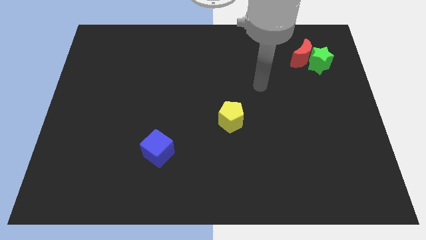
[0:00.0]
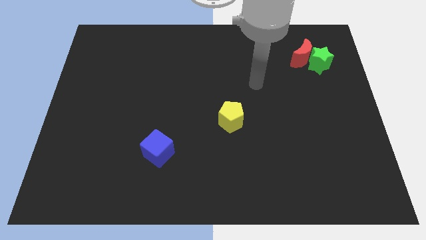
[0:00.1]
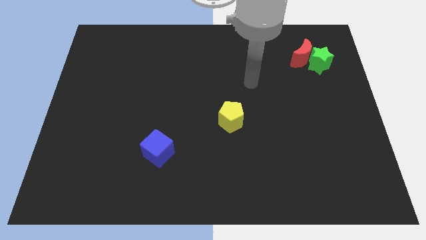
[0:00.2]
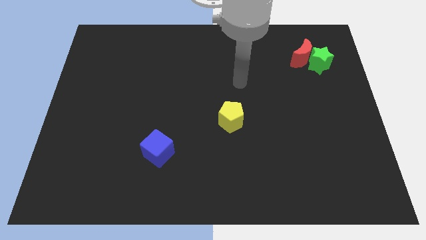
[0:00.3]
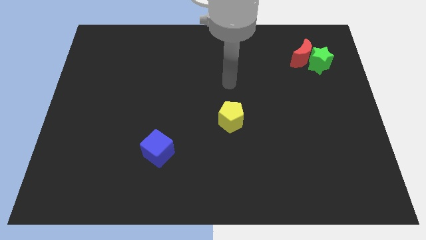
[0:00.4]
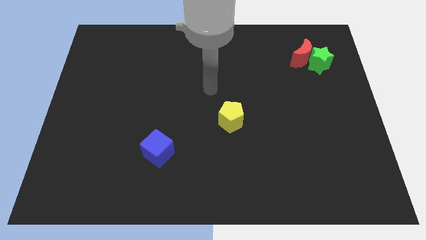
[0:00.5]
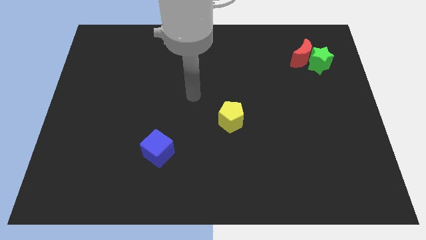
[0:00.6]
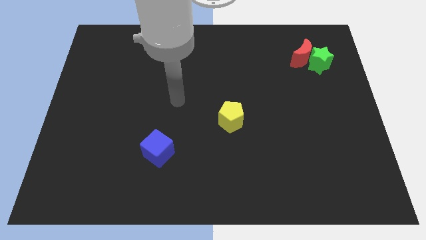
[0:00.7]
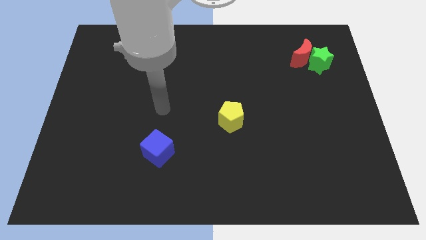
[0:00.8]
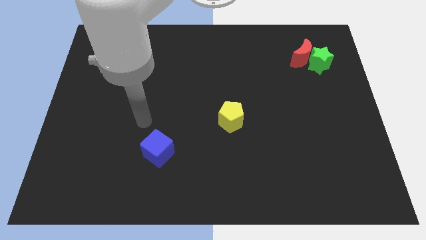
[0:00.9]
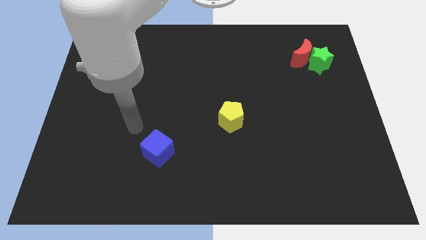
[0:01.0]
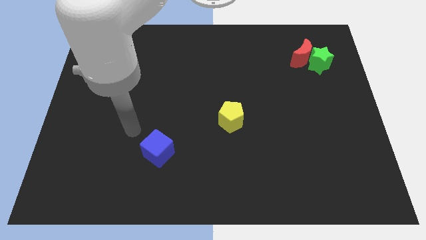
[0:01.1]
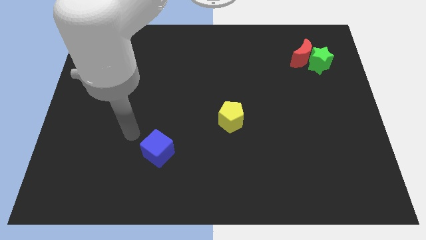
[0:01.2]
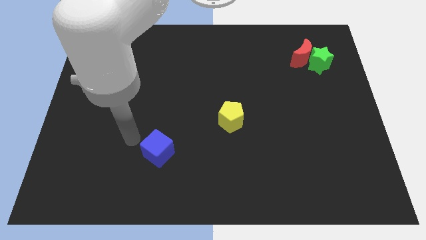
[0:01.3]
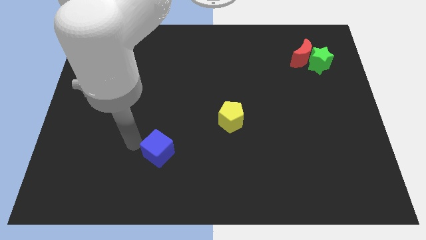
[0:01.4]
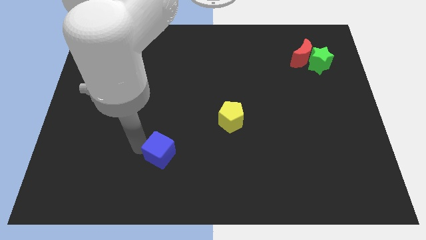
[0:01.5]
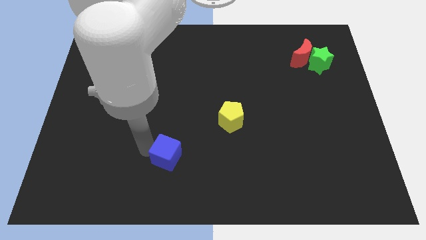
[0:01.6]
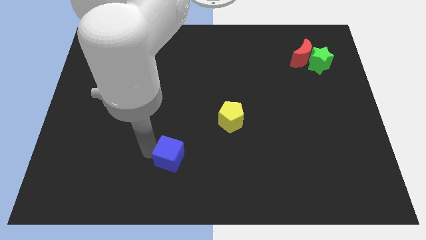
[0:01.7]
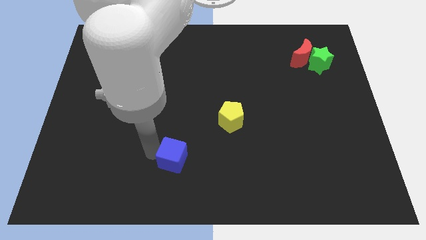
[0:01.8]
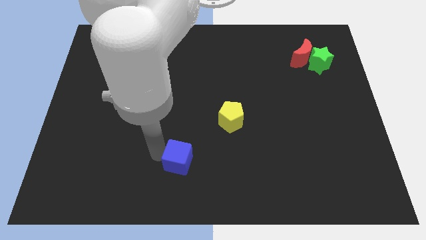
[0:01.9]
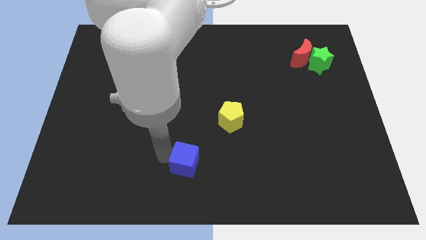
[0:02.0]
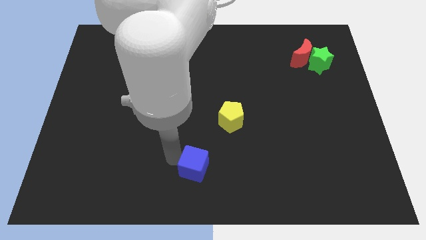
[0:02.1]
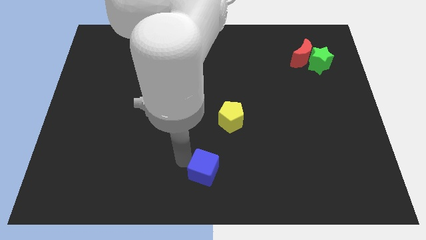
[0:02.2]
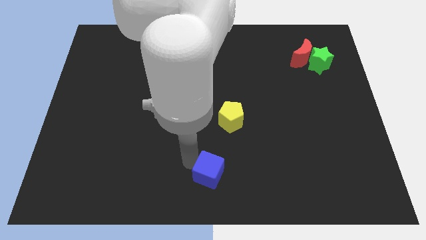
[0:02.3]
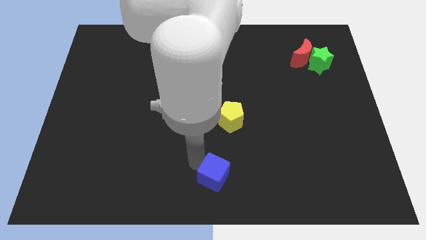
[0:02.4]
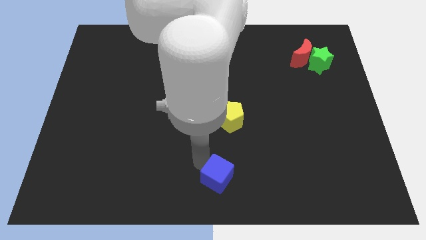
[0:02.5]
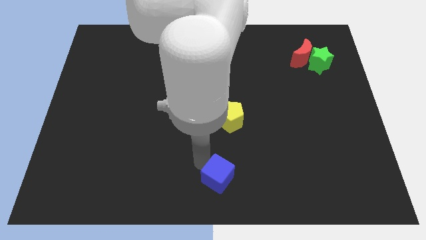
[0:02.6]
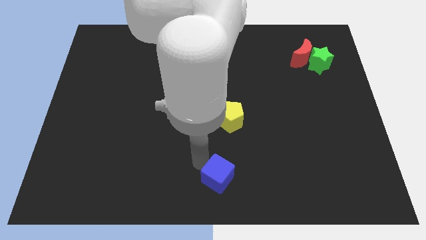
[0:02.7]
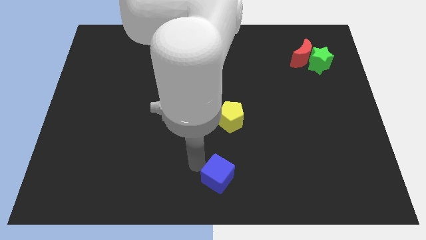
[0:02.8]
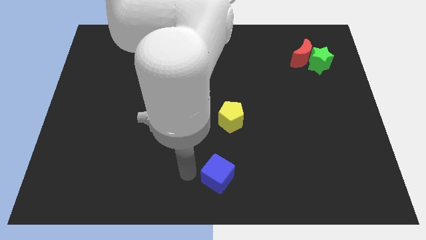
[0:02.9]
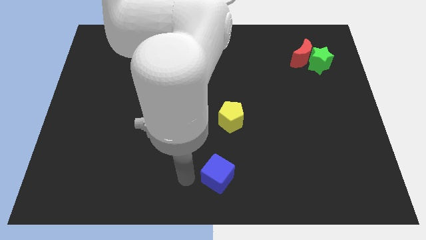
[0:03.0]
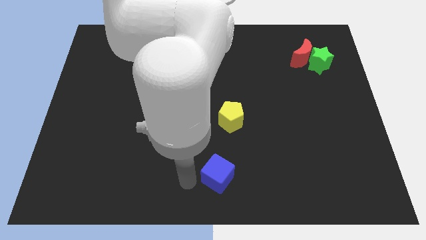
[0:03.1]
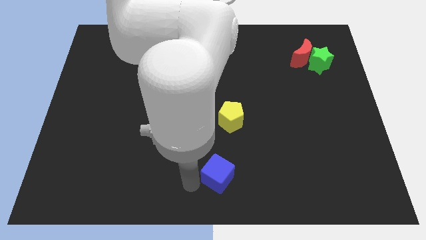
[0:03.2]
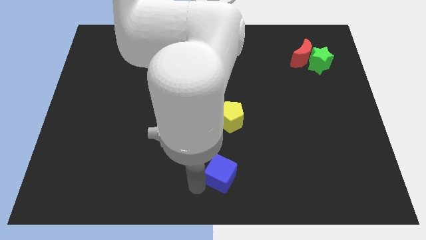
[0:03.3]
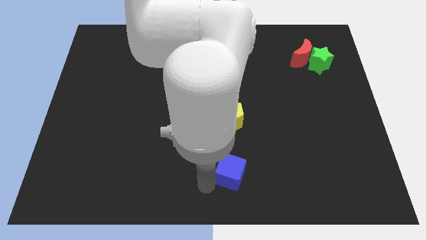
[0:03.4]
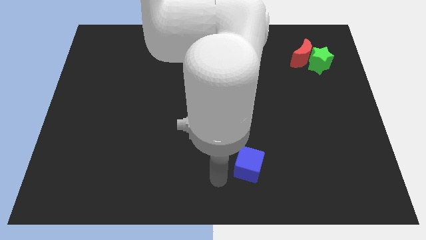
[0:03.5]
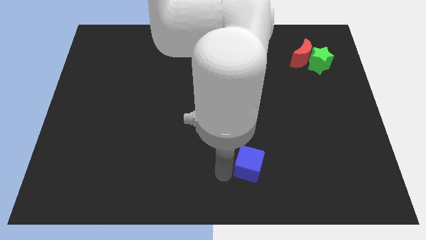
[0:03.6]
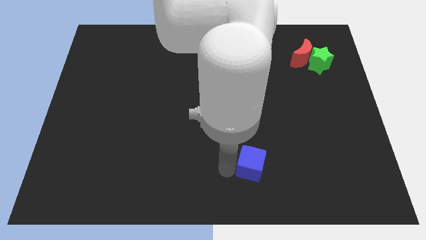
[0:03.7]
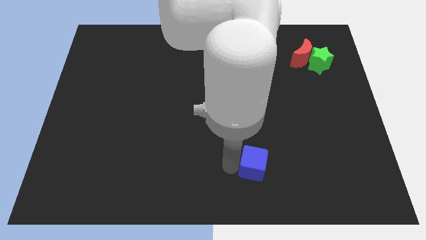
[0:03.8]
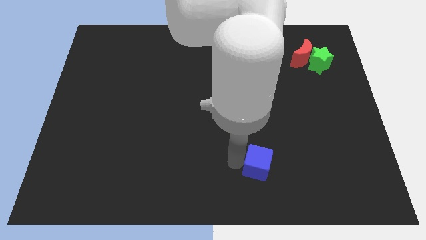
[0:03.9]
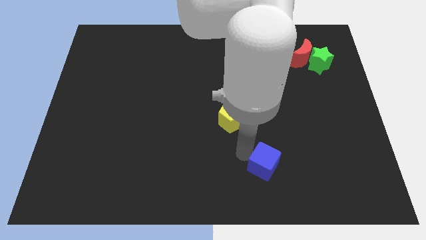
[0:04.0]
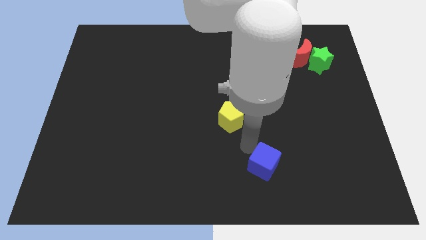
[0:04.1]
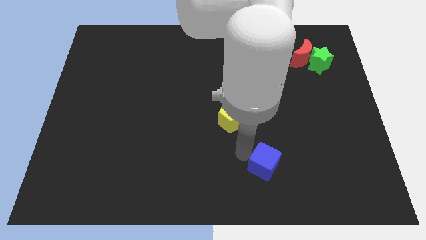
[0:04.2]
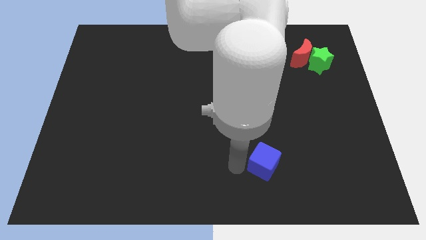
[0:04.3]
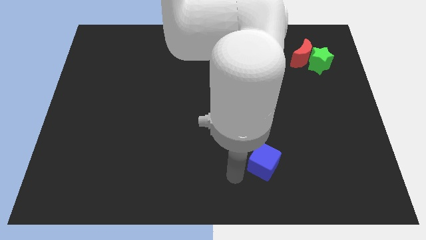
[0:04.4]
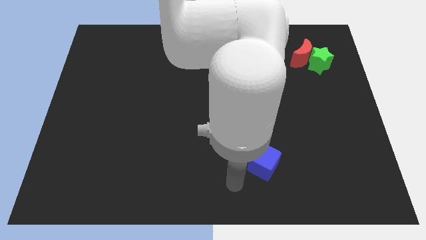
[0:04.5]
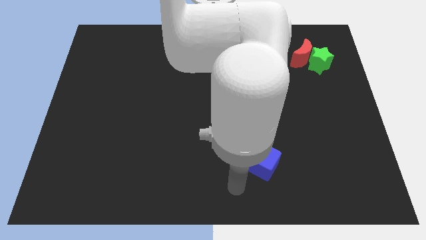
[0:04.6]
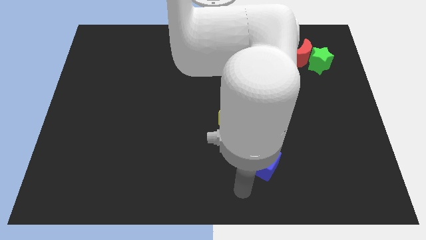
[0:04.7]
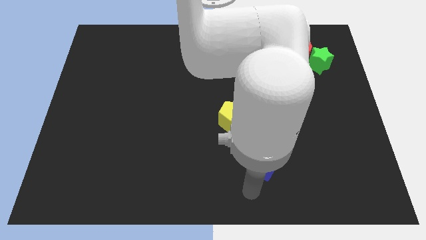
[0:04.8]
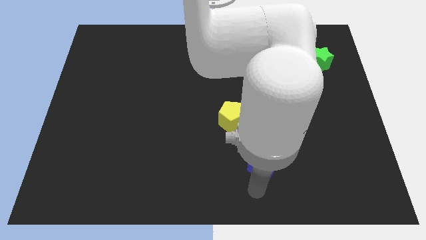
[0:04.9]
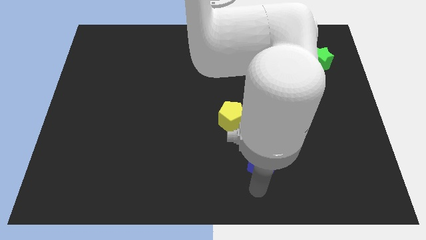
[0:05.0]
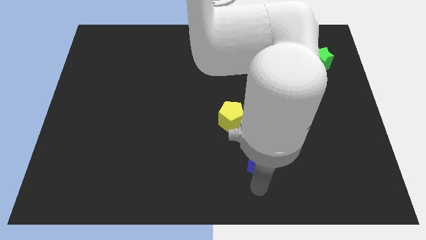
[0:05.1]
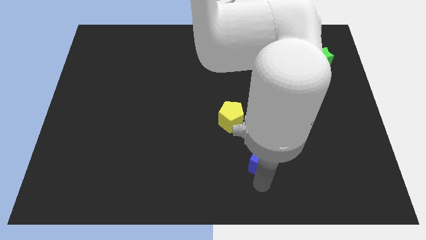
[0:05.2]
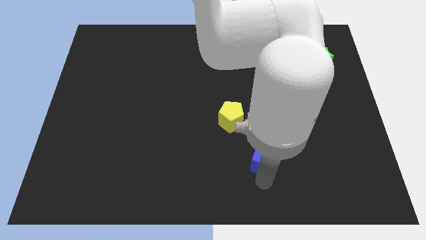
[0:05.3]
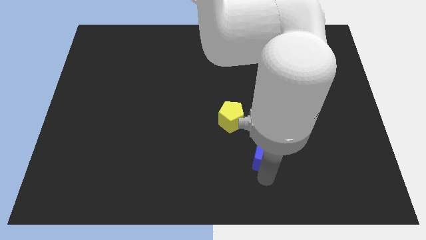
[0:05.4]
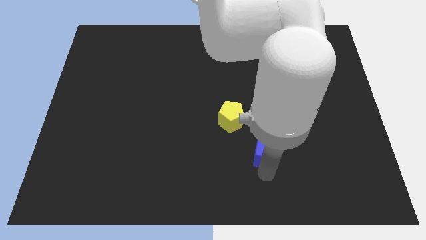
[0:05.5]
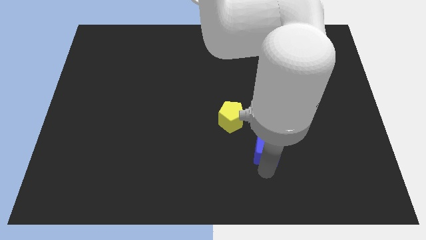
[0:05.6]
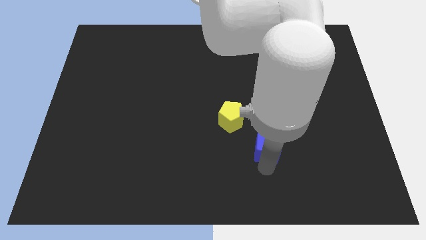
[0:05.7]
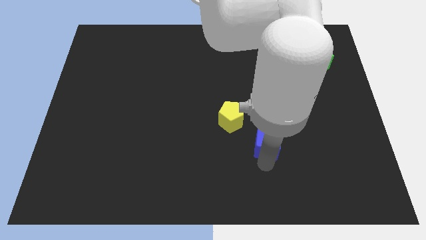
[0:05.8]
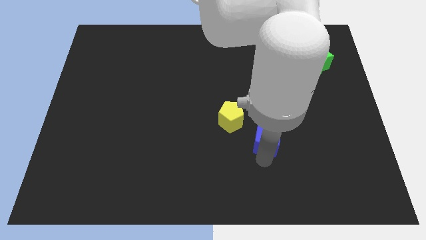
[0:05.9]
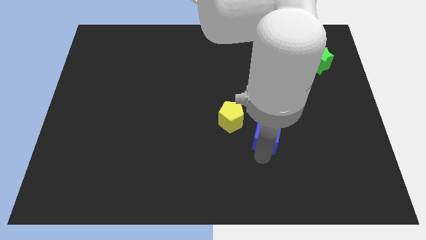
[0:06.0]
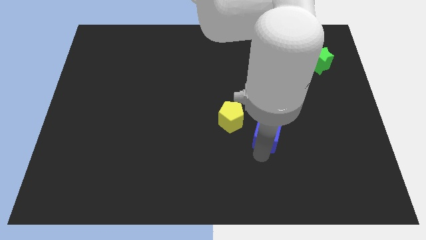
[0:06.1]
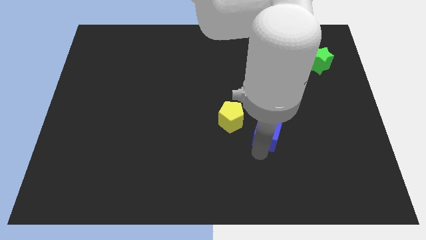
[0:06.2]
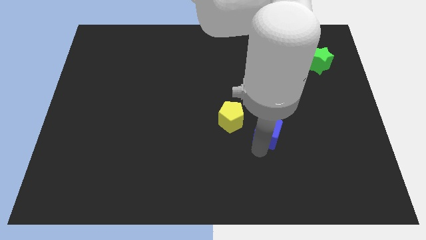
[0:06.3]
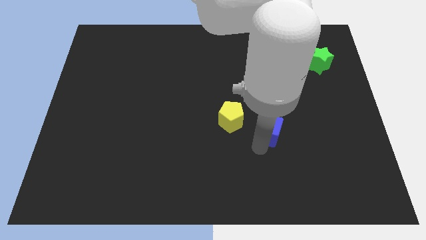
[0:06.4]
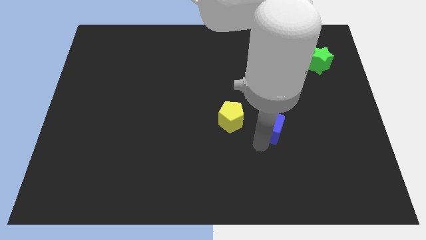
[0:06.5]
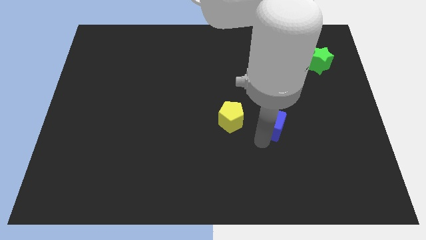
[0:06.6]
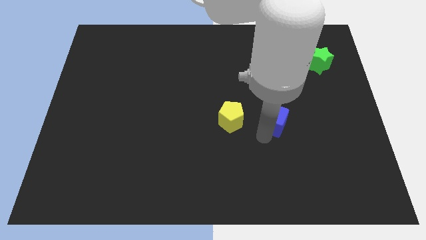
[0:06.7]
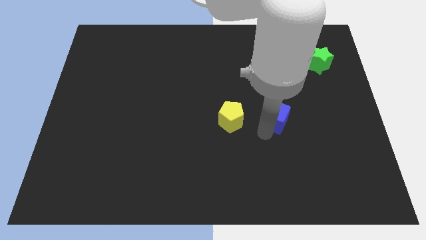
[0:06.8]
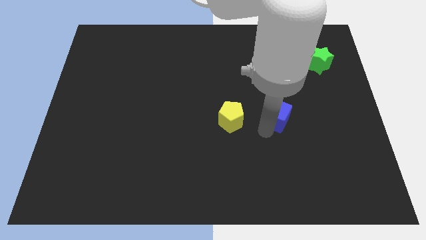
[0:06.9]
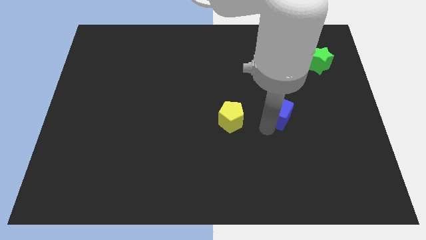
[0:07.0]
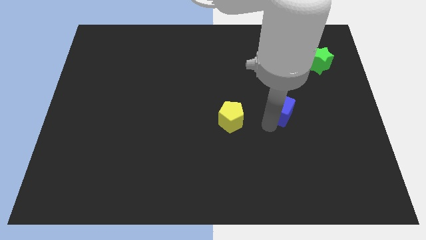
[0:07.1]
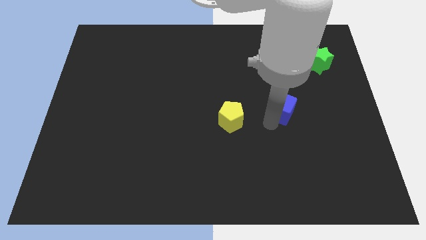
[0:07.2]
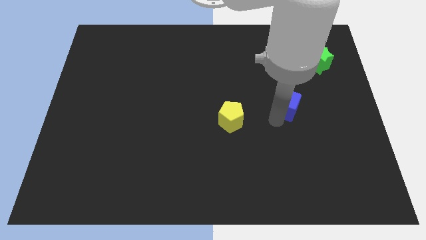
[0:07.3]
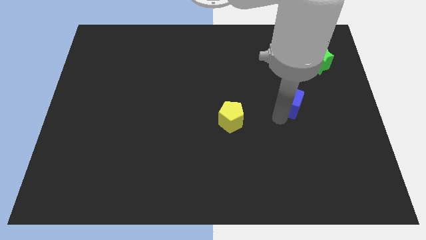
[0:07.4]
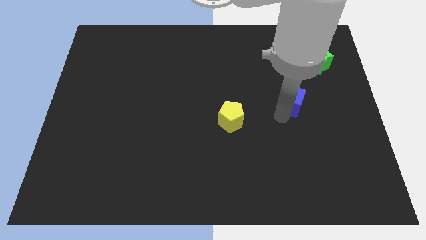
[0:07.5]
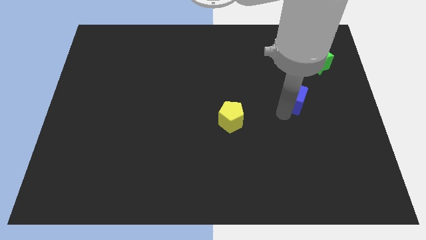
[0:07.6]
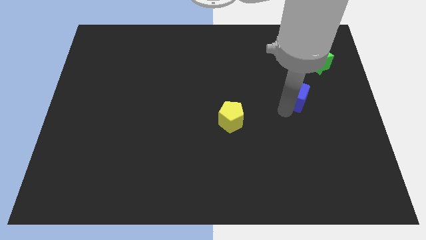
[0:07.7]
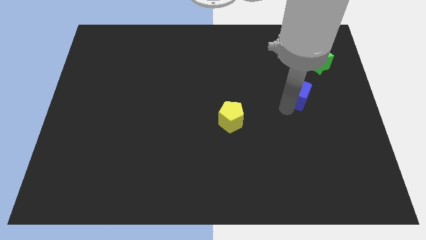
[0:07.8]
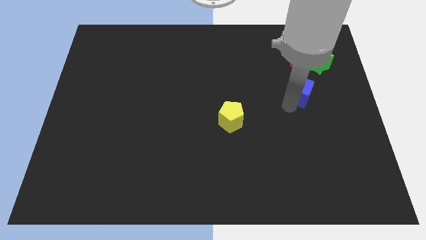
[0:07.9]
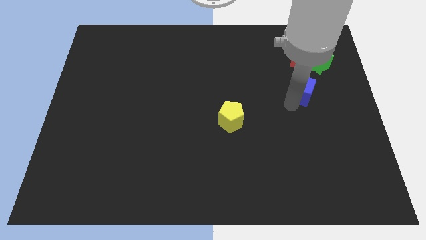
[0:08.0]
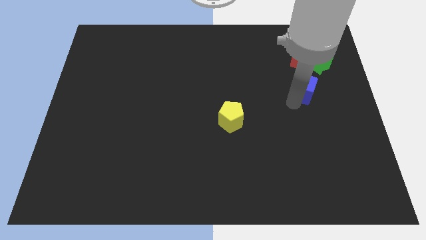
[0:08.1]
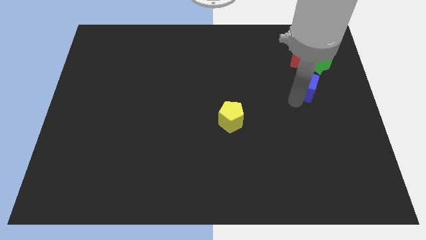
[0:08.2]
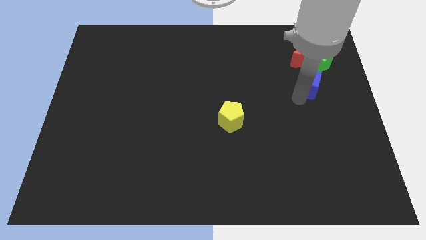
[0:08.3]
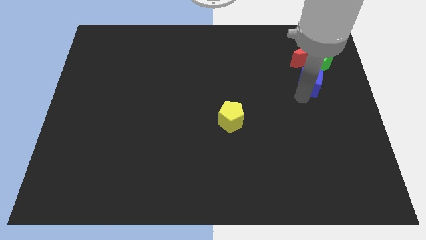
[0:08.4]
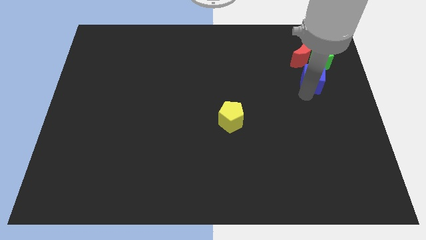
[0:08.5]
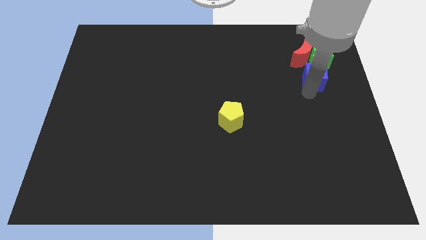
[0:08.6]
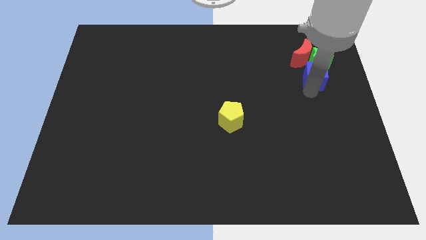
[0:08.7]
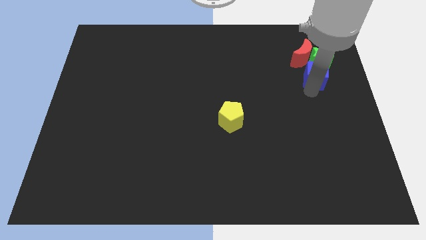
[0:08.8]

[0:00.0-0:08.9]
put the blue cube close to the green star
